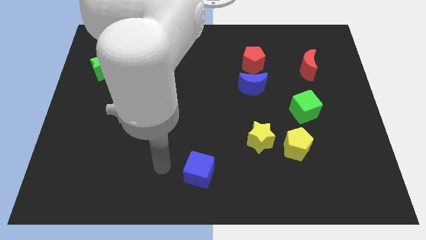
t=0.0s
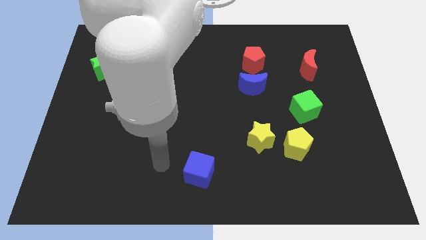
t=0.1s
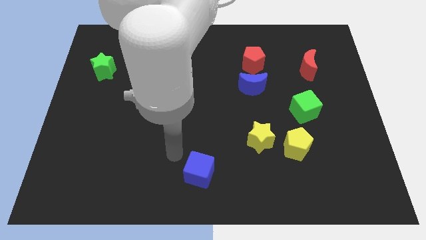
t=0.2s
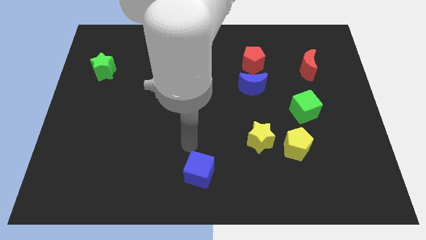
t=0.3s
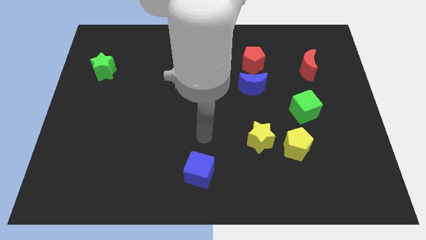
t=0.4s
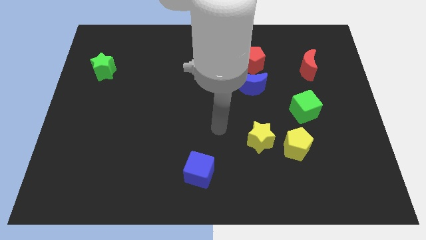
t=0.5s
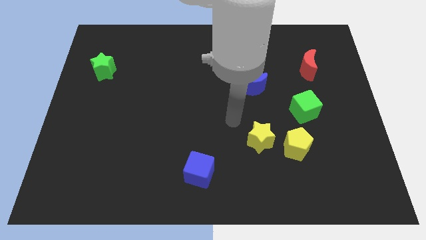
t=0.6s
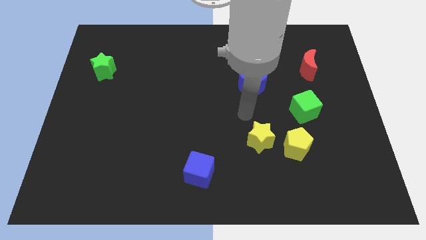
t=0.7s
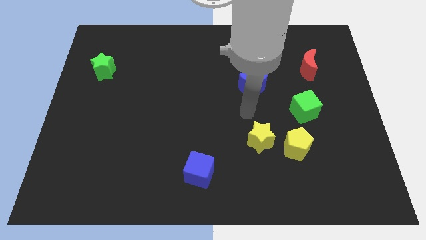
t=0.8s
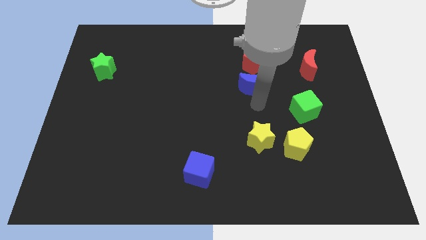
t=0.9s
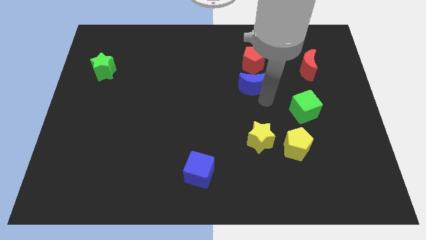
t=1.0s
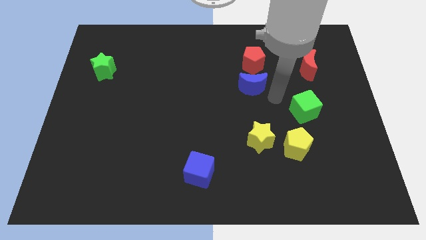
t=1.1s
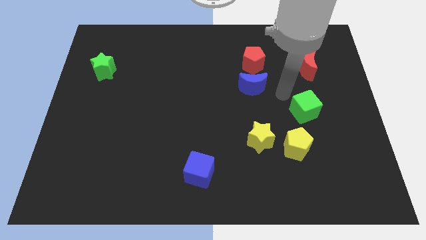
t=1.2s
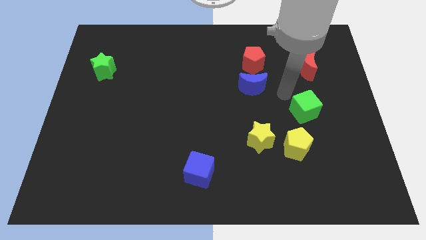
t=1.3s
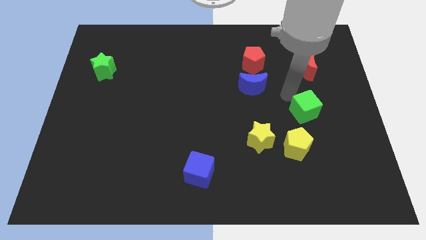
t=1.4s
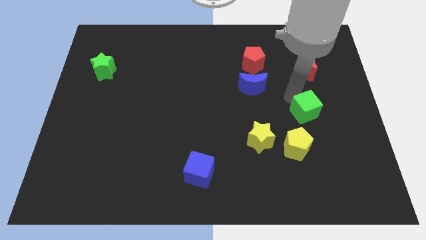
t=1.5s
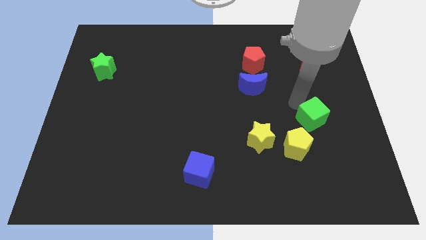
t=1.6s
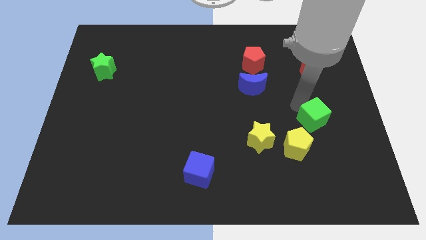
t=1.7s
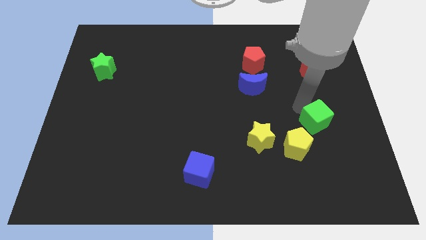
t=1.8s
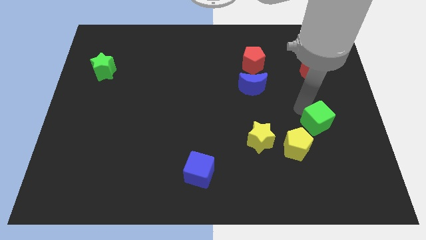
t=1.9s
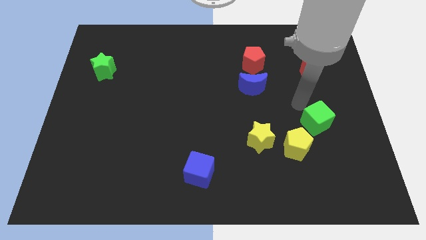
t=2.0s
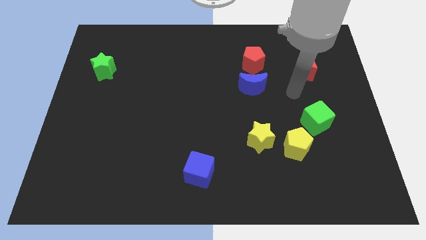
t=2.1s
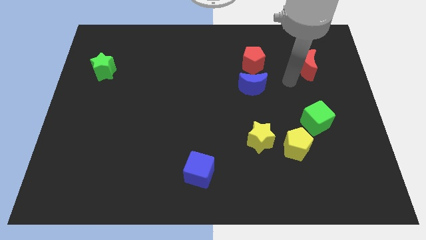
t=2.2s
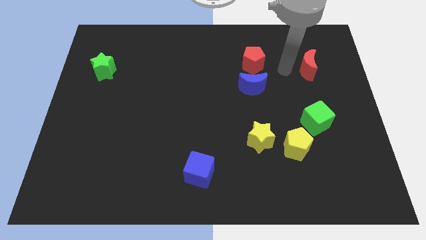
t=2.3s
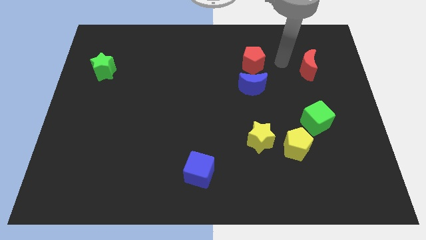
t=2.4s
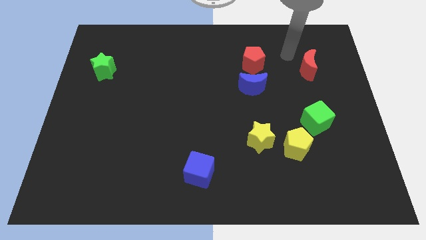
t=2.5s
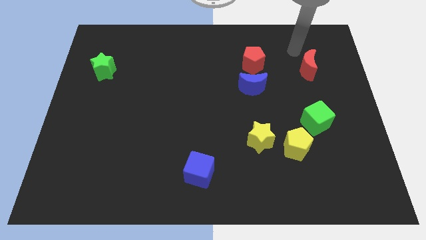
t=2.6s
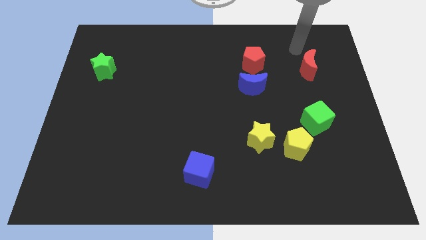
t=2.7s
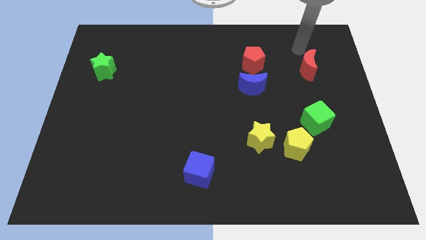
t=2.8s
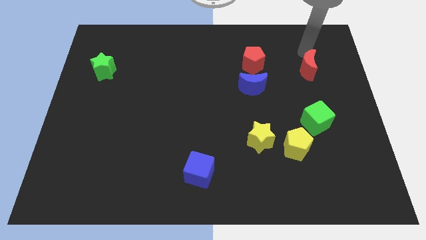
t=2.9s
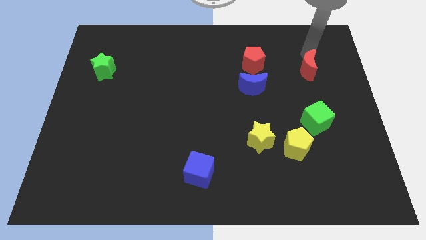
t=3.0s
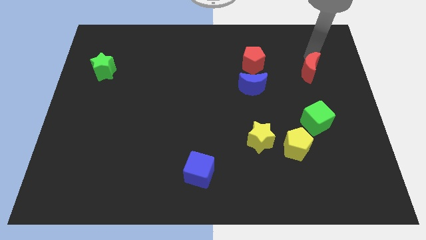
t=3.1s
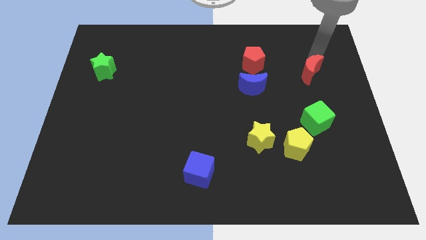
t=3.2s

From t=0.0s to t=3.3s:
place green cube to the top right of the yellow pentagon

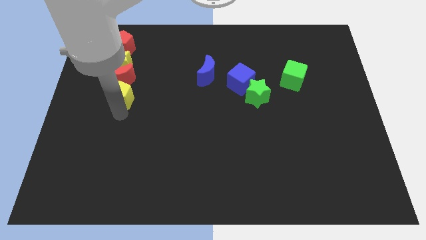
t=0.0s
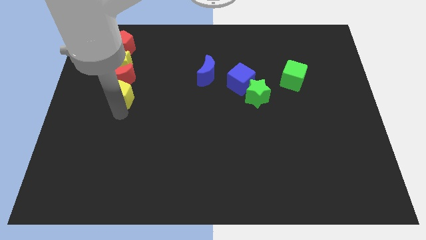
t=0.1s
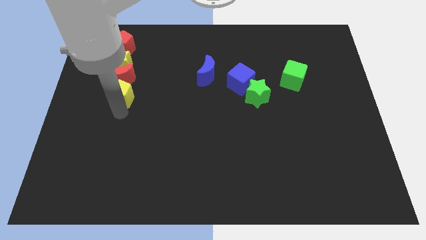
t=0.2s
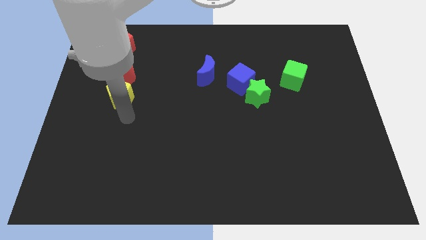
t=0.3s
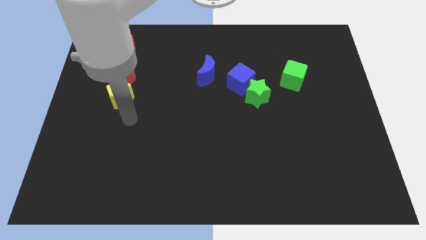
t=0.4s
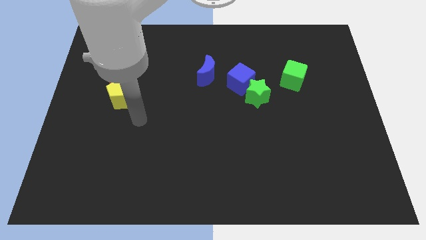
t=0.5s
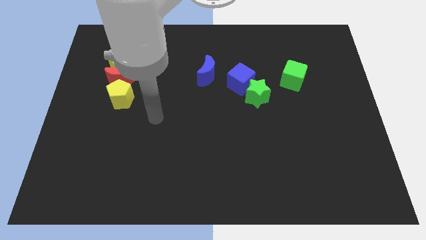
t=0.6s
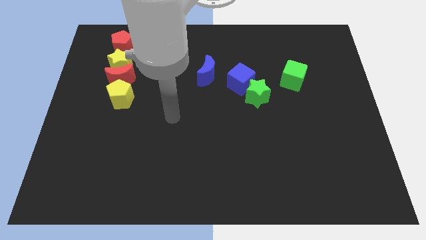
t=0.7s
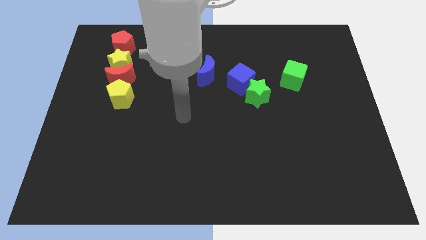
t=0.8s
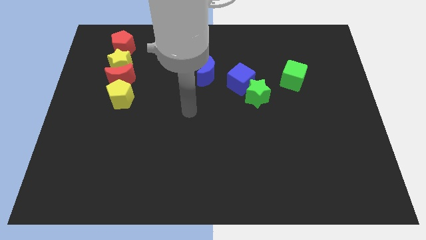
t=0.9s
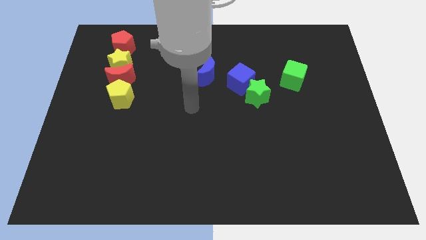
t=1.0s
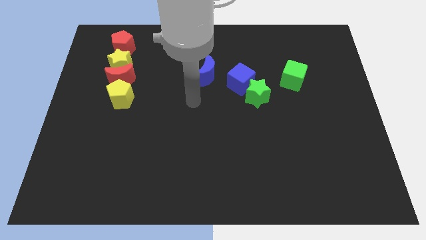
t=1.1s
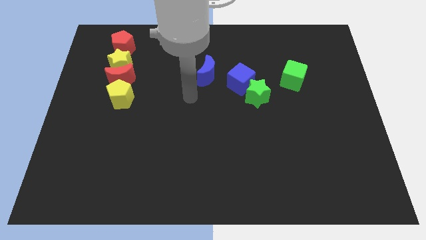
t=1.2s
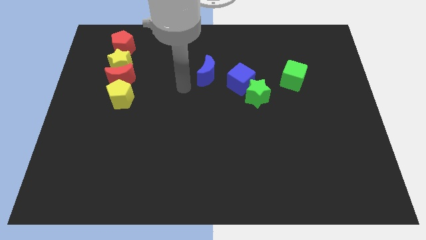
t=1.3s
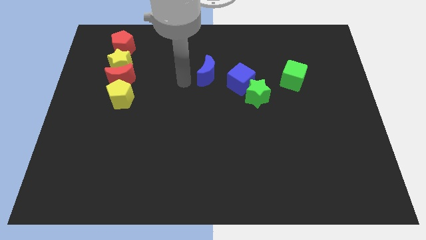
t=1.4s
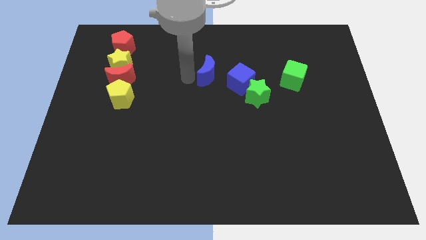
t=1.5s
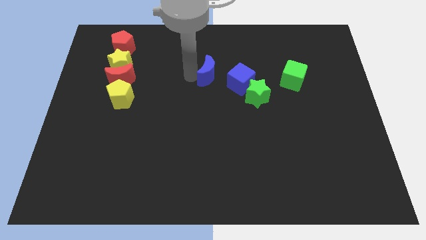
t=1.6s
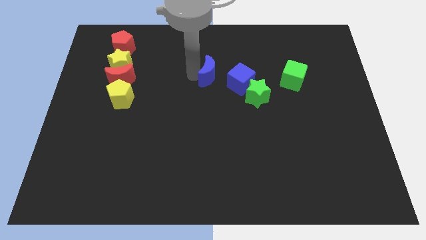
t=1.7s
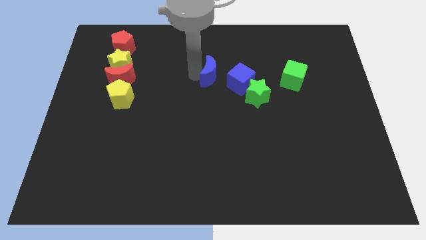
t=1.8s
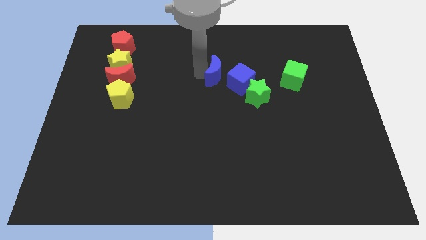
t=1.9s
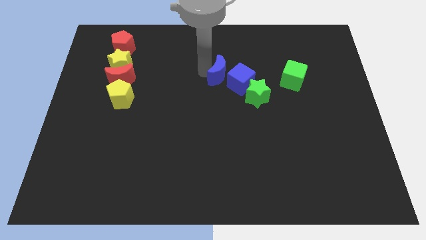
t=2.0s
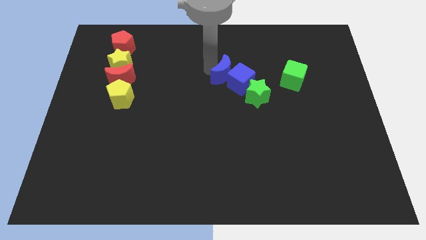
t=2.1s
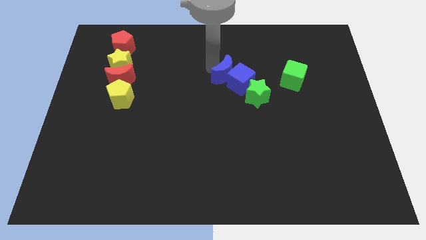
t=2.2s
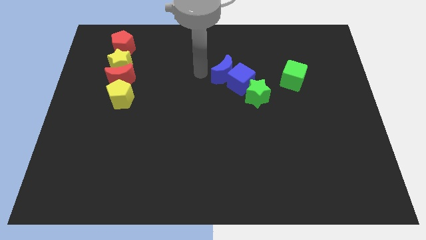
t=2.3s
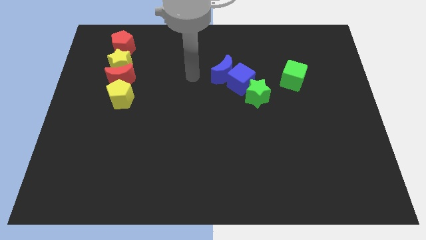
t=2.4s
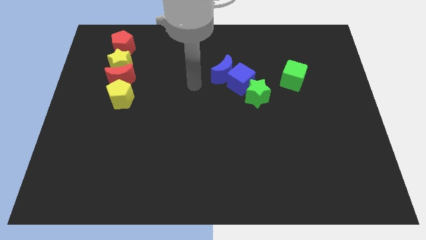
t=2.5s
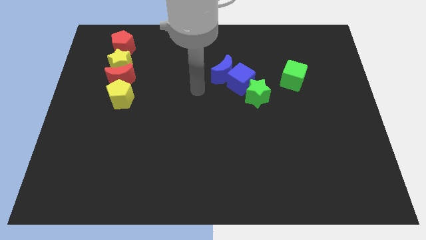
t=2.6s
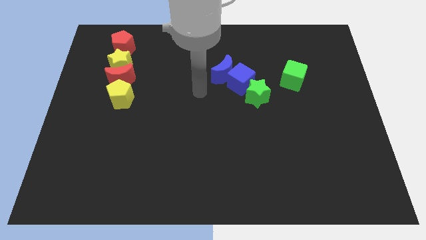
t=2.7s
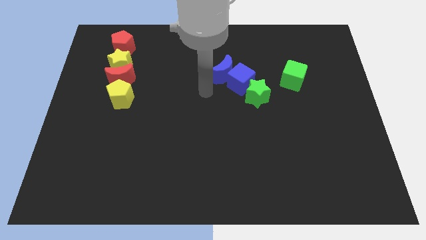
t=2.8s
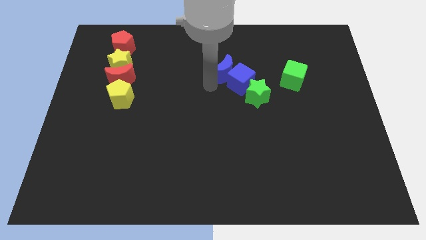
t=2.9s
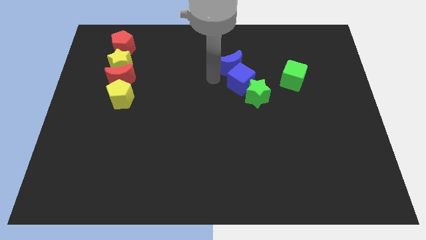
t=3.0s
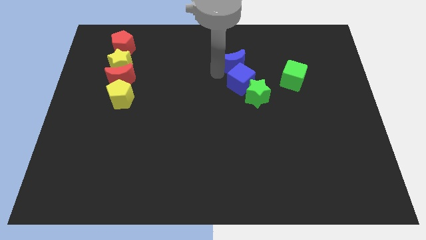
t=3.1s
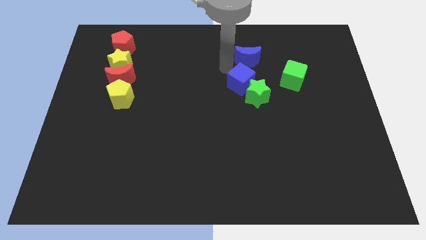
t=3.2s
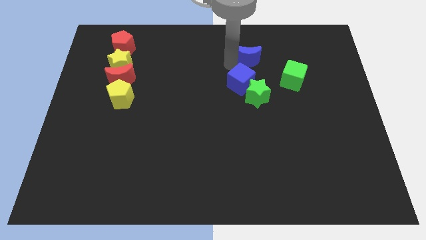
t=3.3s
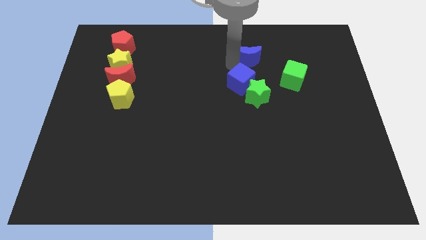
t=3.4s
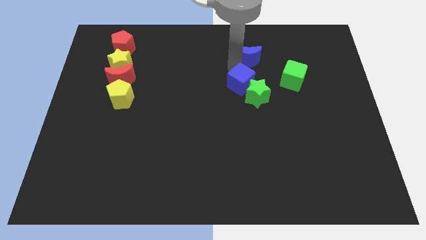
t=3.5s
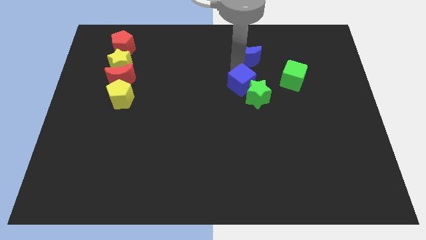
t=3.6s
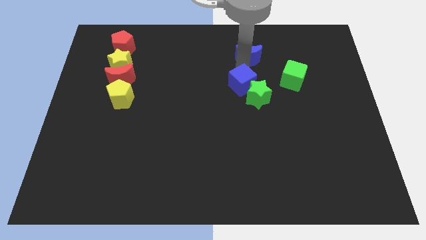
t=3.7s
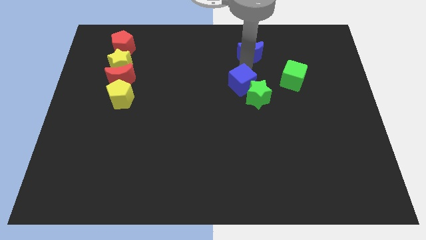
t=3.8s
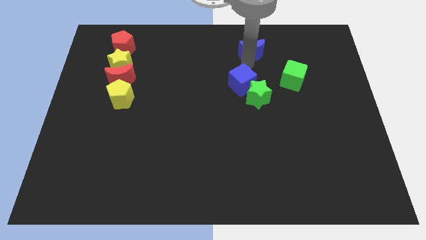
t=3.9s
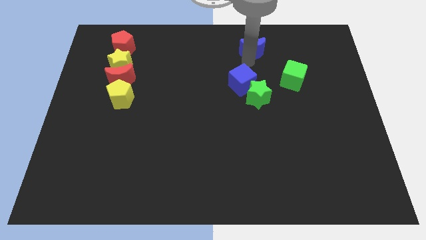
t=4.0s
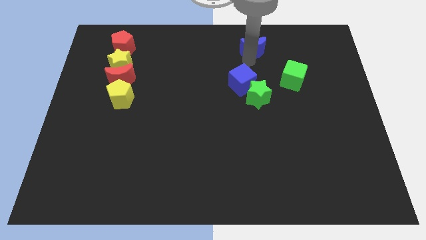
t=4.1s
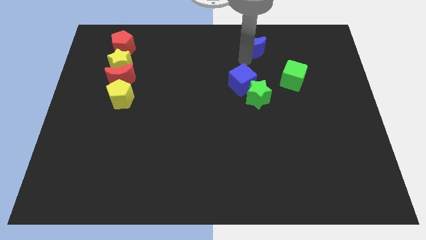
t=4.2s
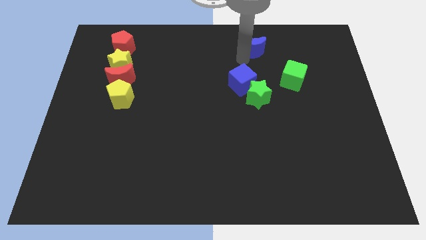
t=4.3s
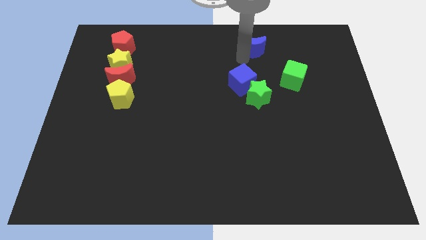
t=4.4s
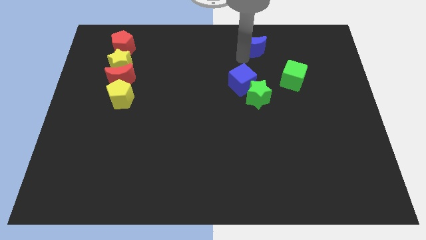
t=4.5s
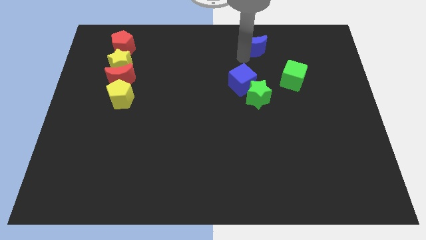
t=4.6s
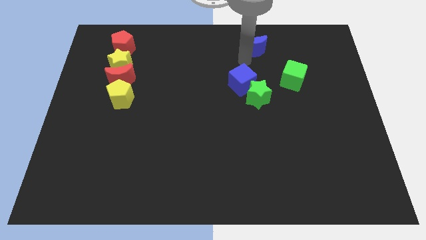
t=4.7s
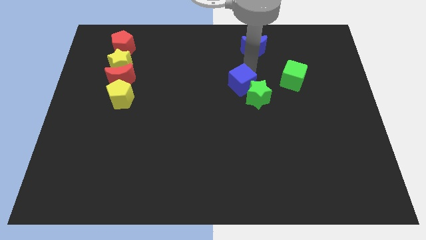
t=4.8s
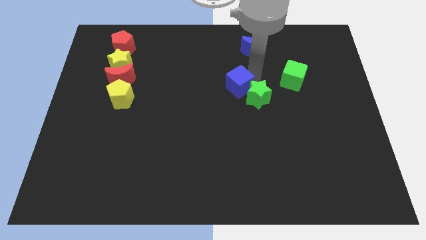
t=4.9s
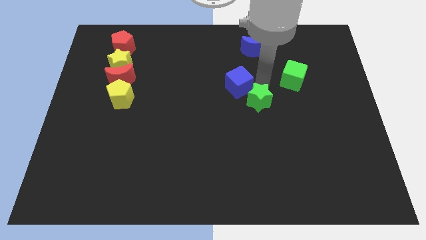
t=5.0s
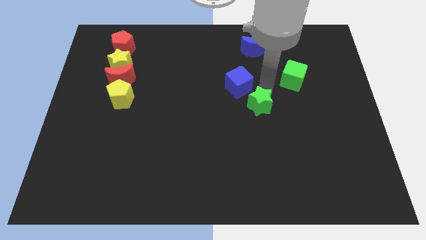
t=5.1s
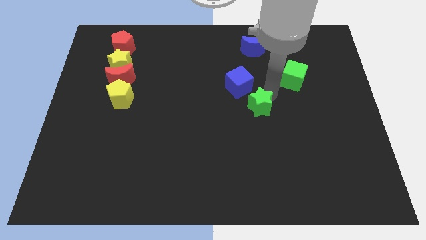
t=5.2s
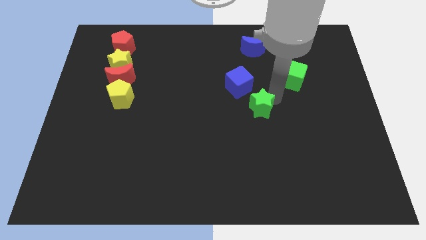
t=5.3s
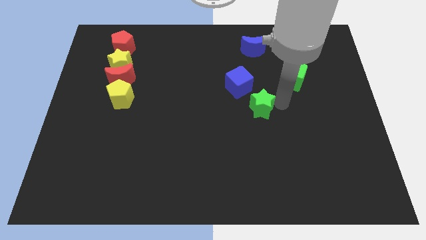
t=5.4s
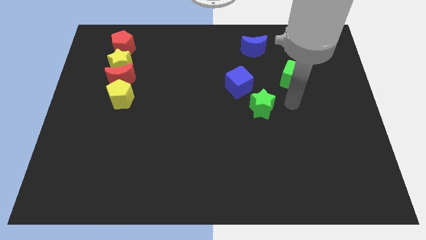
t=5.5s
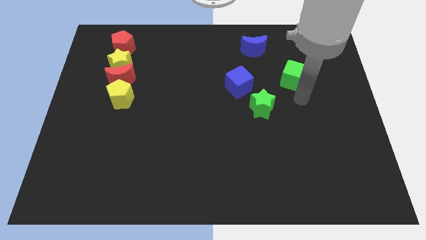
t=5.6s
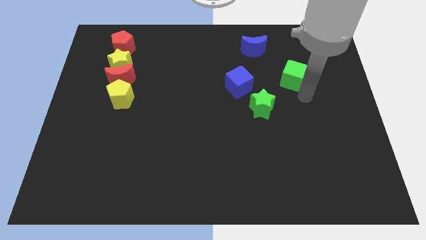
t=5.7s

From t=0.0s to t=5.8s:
move the blue crescent to the right top
